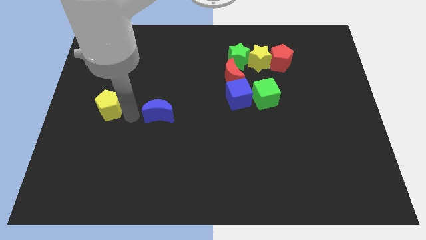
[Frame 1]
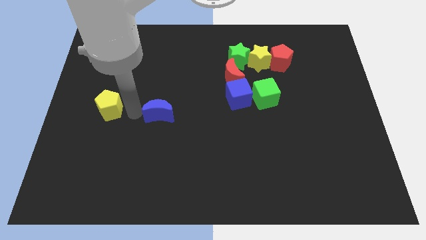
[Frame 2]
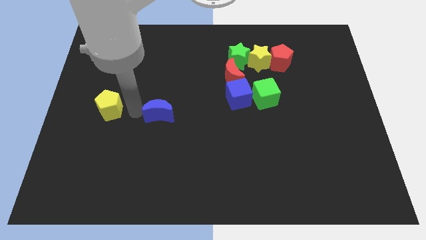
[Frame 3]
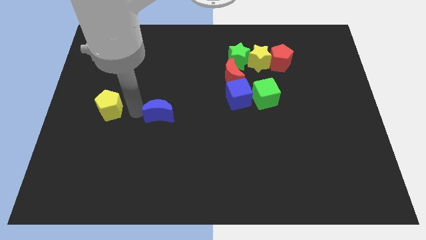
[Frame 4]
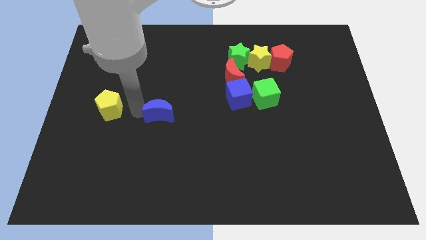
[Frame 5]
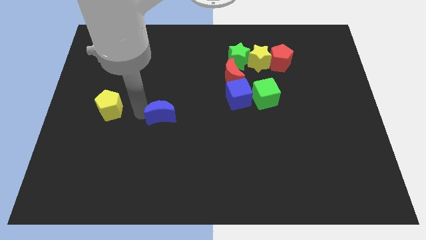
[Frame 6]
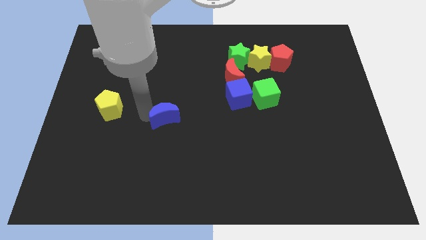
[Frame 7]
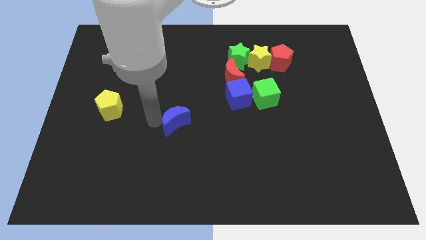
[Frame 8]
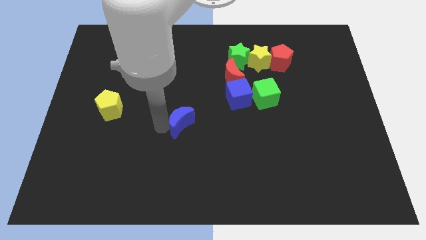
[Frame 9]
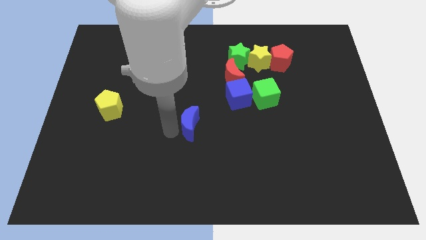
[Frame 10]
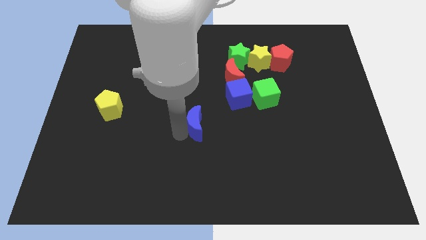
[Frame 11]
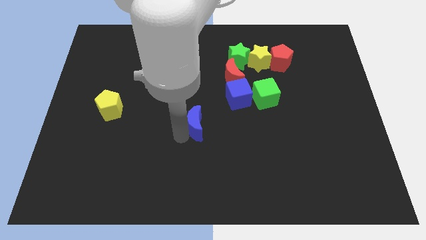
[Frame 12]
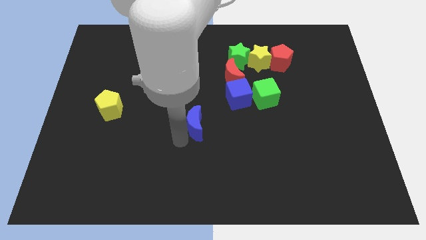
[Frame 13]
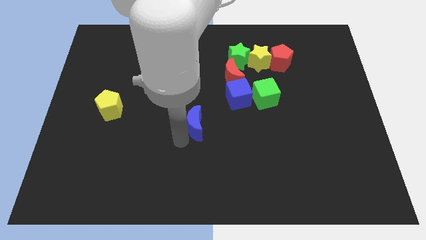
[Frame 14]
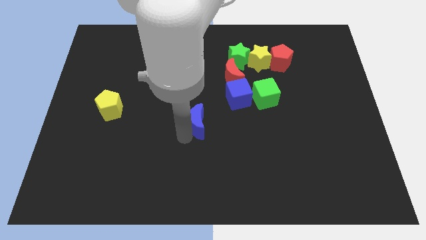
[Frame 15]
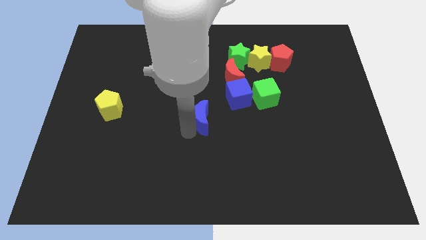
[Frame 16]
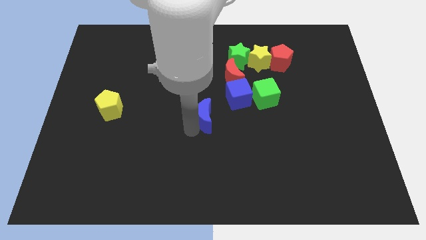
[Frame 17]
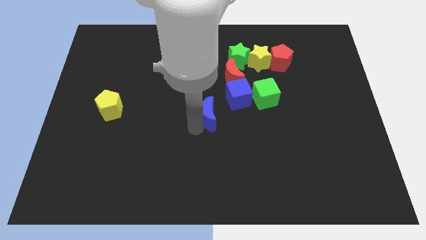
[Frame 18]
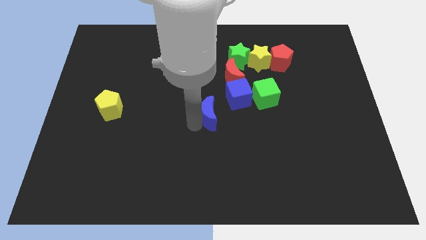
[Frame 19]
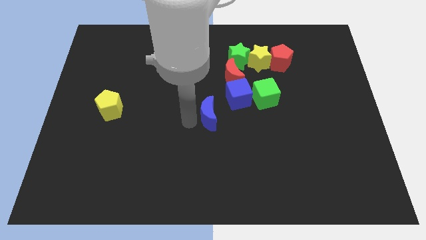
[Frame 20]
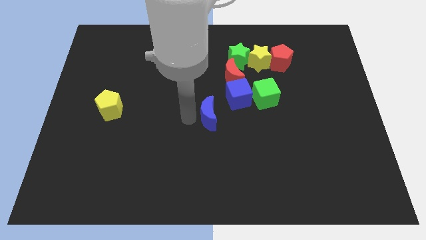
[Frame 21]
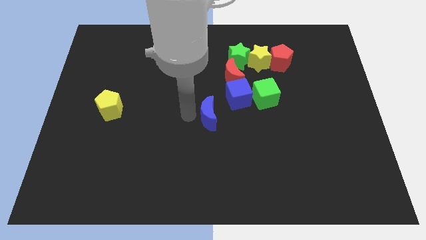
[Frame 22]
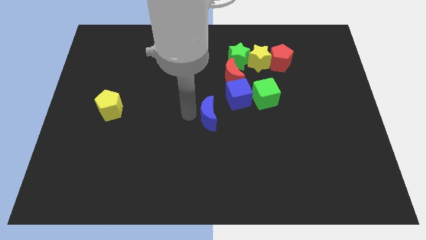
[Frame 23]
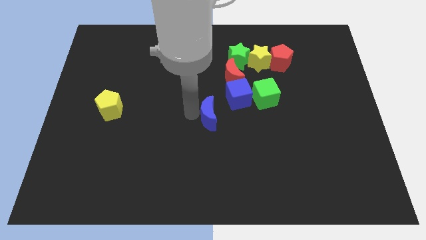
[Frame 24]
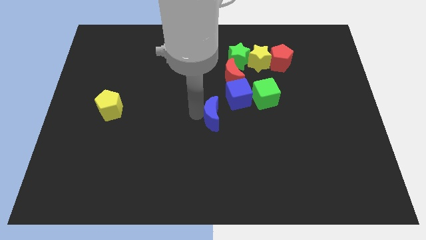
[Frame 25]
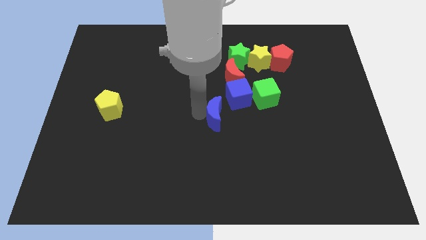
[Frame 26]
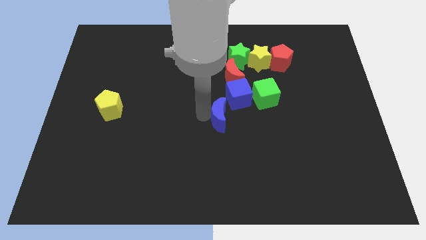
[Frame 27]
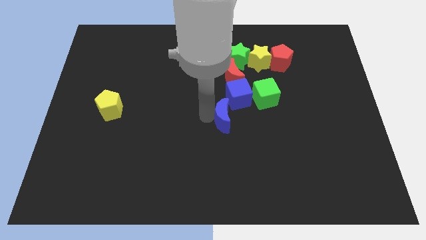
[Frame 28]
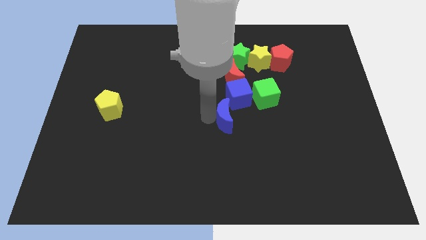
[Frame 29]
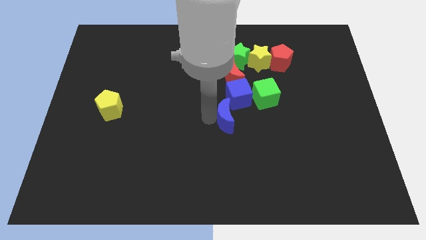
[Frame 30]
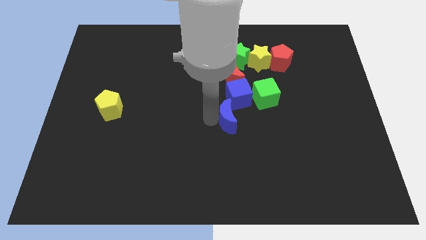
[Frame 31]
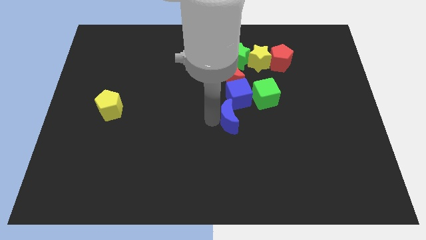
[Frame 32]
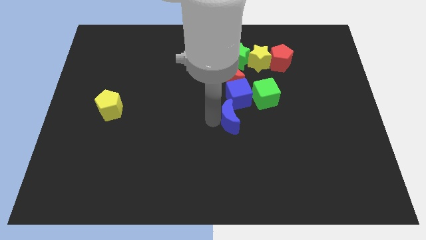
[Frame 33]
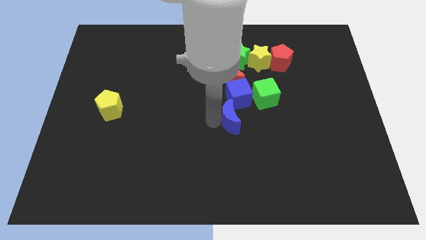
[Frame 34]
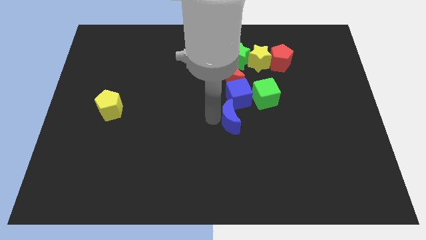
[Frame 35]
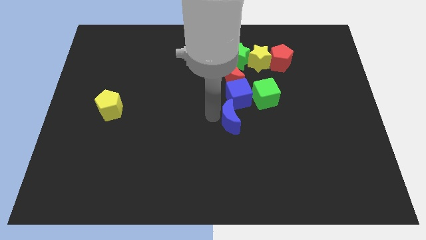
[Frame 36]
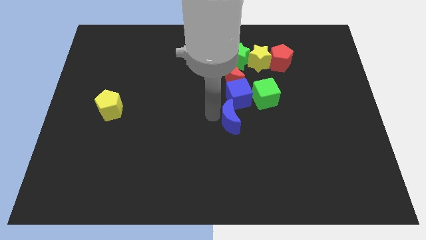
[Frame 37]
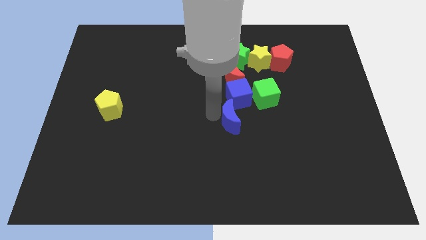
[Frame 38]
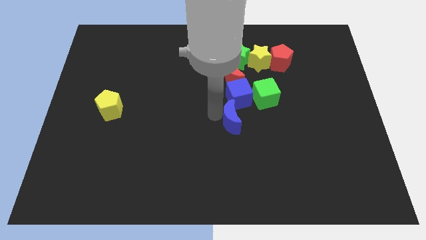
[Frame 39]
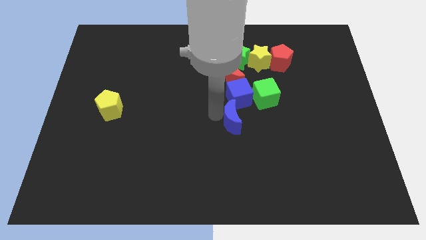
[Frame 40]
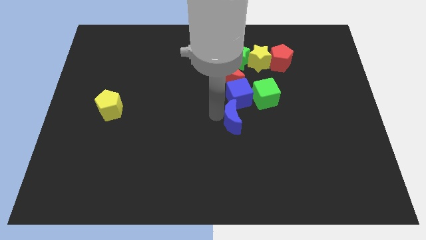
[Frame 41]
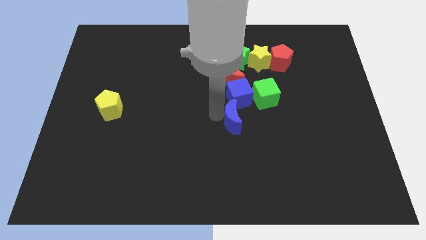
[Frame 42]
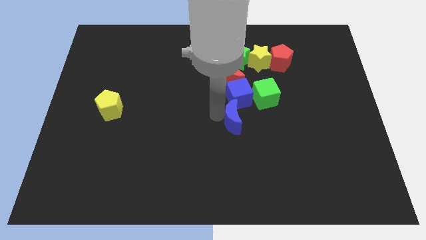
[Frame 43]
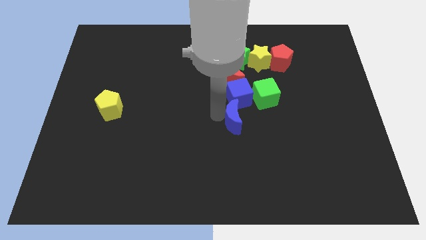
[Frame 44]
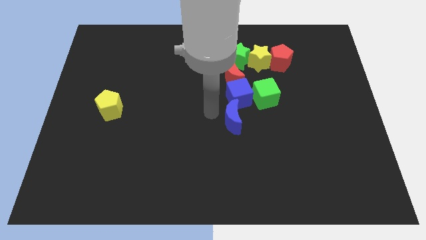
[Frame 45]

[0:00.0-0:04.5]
move the blue crescent below the blue cube

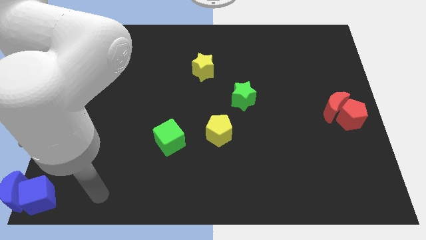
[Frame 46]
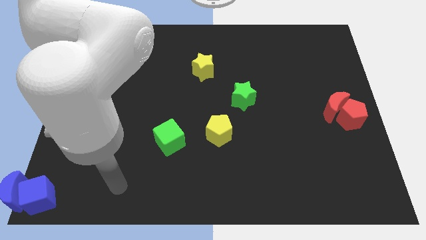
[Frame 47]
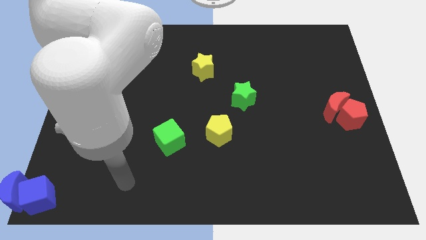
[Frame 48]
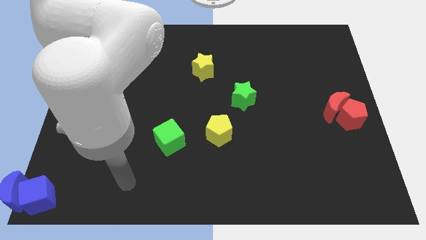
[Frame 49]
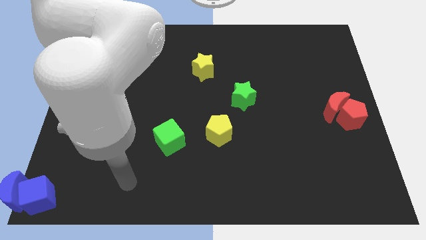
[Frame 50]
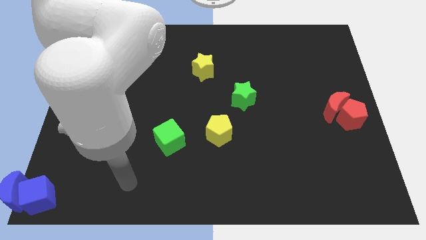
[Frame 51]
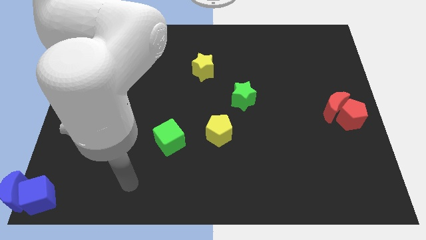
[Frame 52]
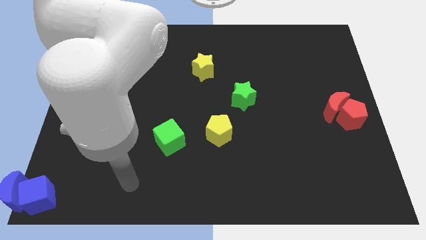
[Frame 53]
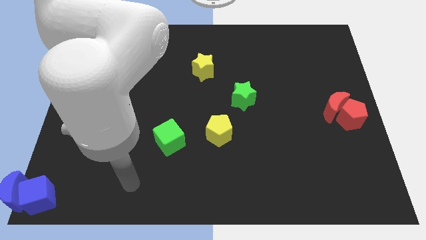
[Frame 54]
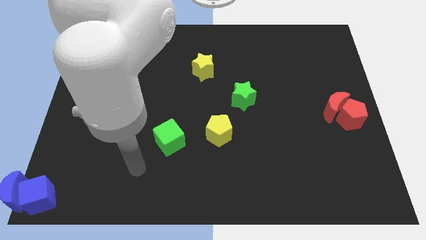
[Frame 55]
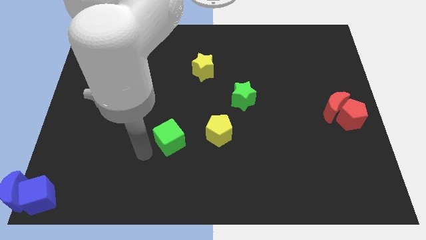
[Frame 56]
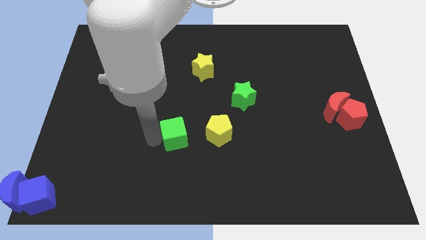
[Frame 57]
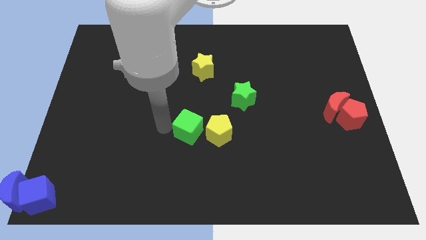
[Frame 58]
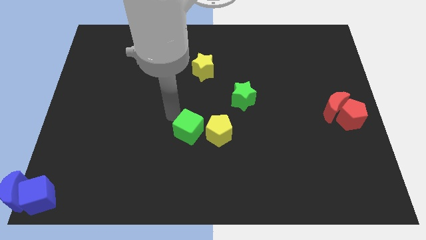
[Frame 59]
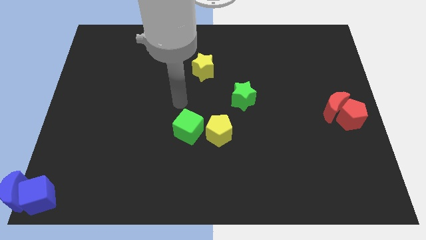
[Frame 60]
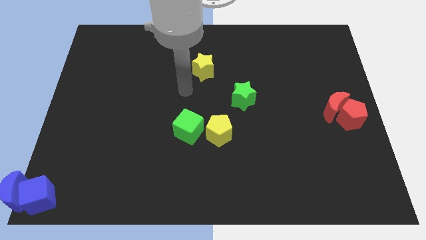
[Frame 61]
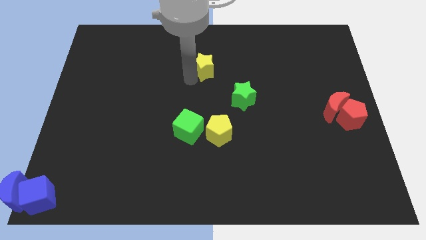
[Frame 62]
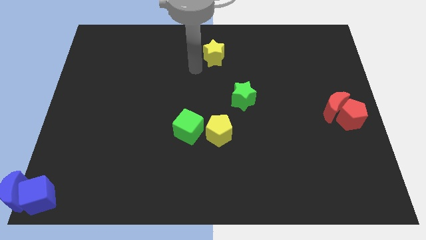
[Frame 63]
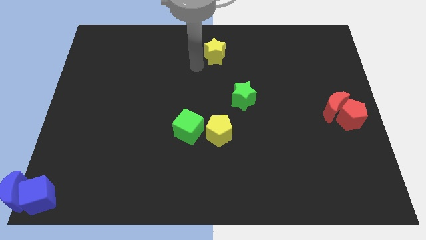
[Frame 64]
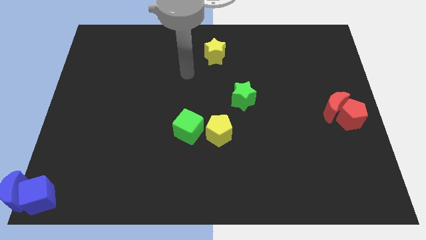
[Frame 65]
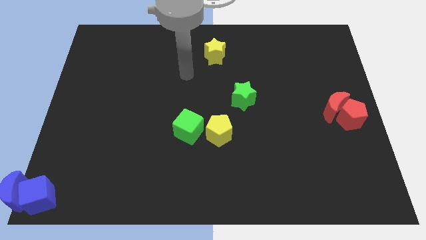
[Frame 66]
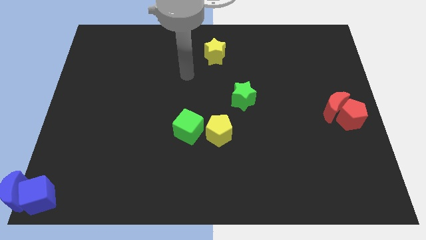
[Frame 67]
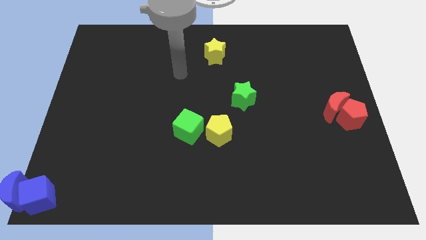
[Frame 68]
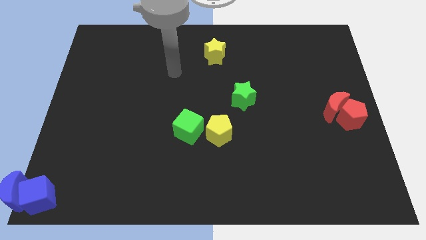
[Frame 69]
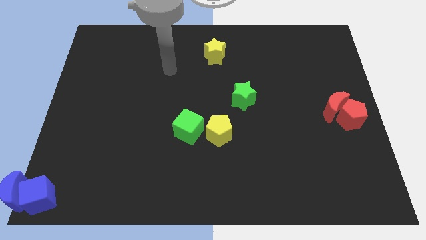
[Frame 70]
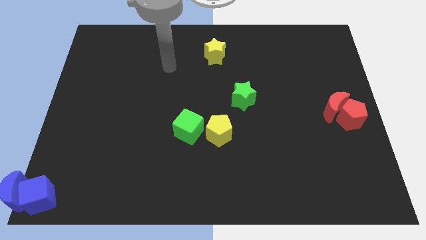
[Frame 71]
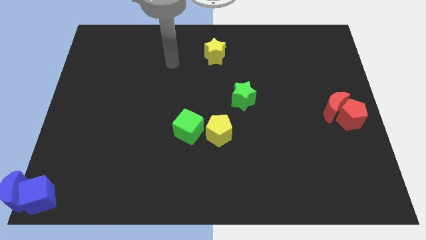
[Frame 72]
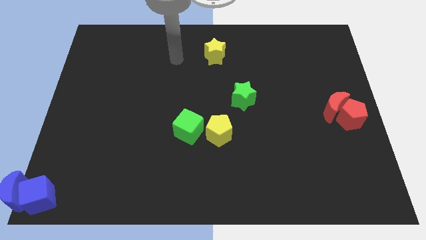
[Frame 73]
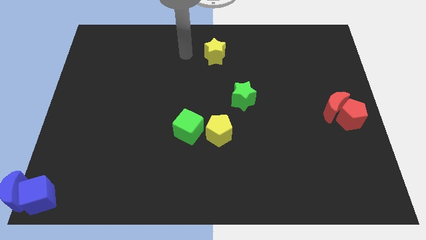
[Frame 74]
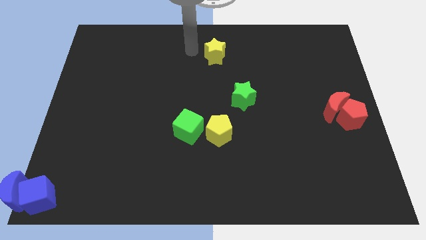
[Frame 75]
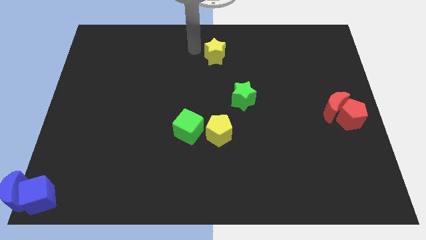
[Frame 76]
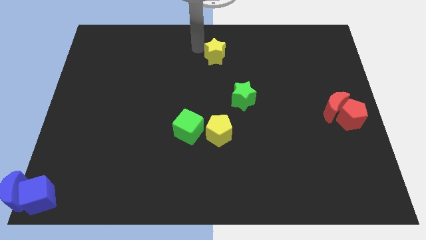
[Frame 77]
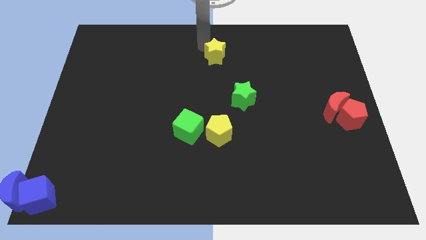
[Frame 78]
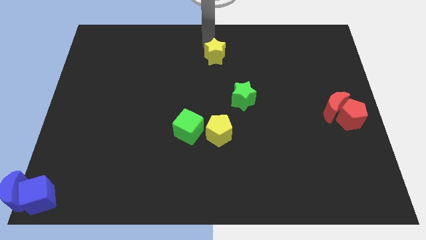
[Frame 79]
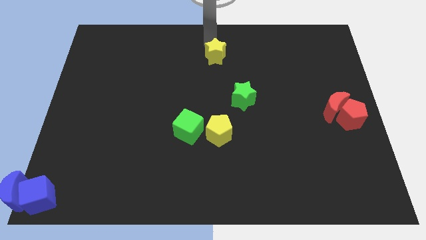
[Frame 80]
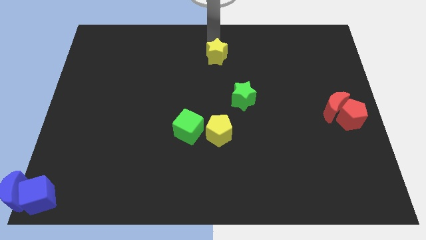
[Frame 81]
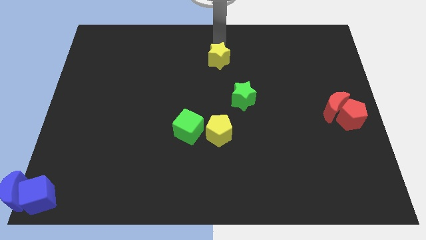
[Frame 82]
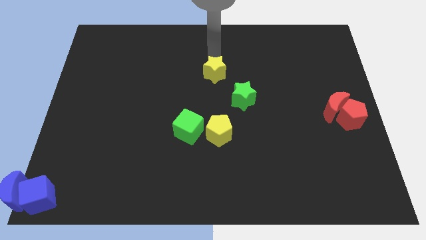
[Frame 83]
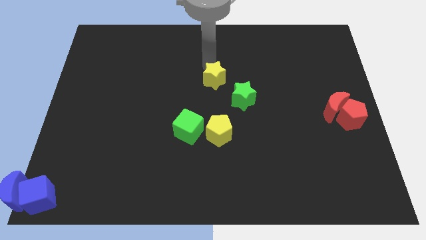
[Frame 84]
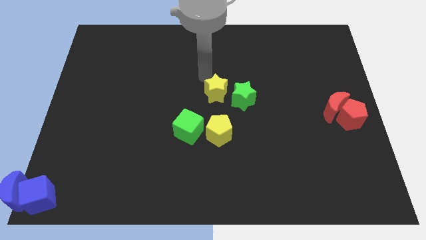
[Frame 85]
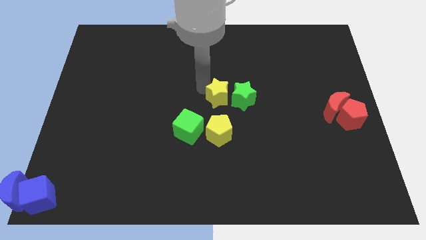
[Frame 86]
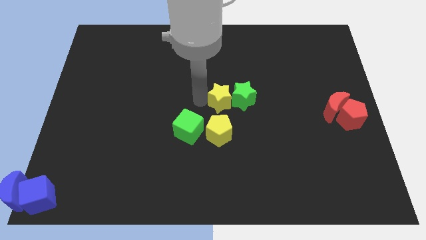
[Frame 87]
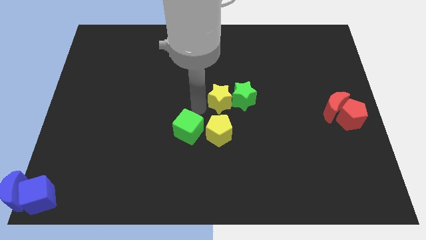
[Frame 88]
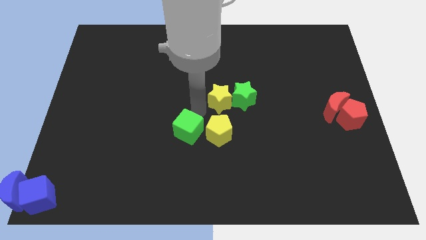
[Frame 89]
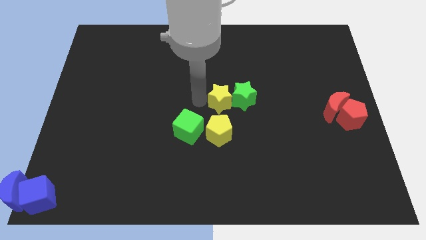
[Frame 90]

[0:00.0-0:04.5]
move the yellow star to the left of the green star

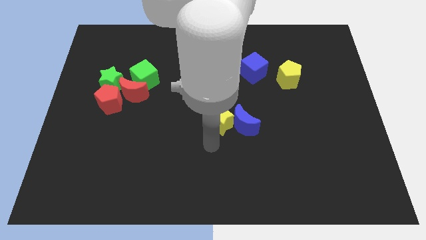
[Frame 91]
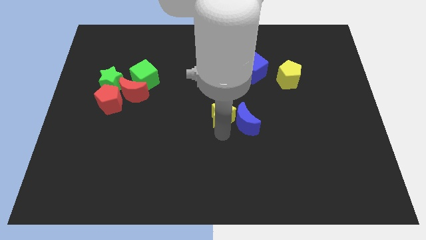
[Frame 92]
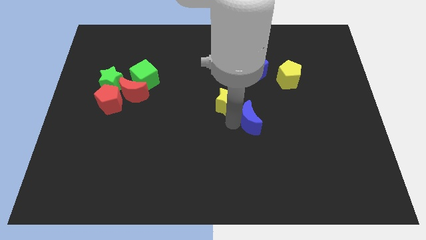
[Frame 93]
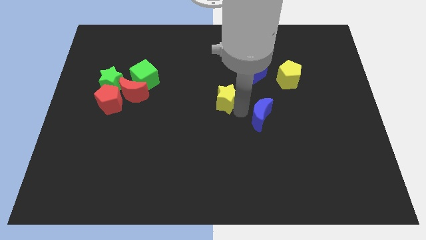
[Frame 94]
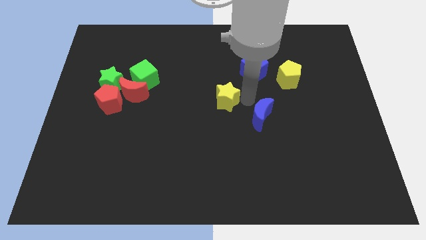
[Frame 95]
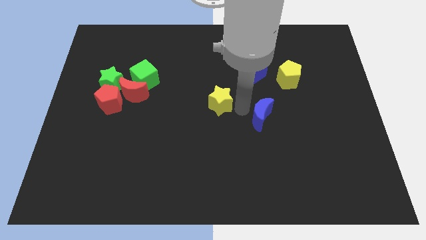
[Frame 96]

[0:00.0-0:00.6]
place your arm in between the yellow star and blue crescent
